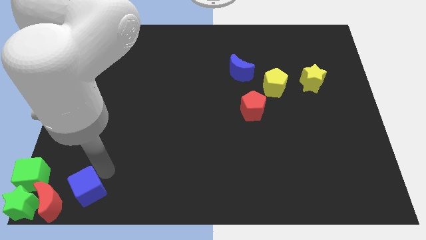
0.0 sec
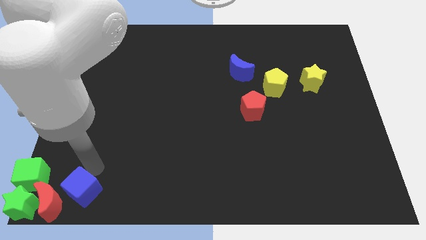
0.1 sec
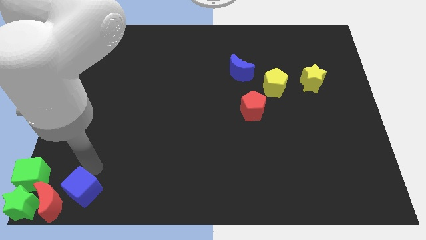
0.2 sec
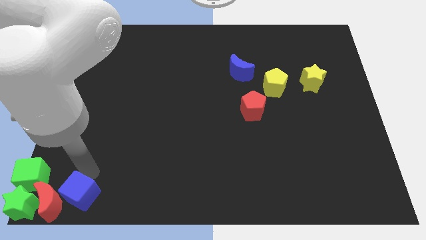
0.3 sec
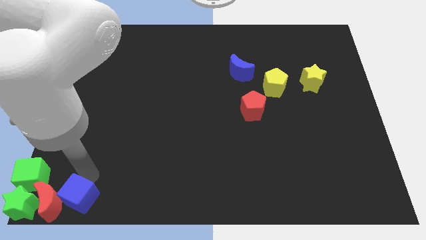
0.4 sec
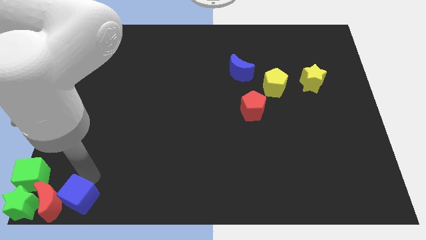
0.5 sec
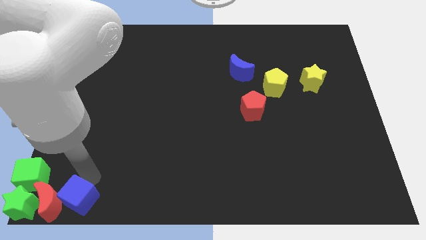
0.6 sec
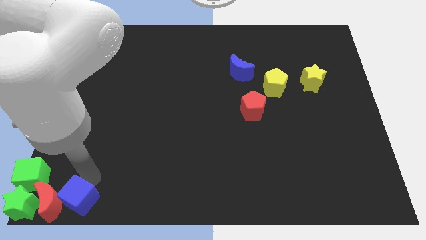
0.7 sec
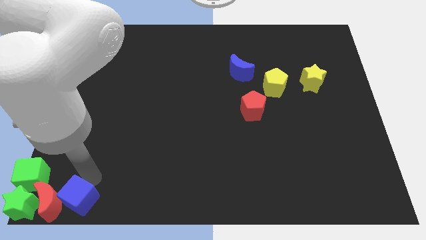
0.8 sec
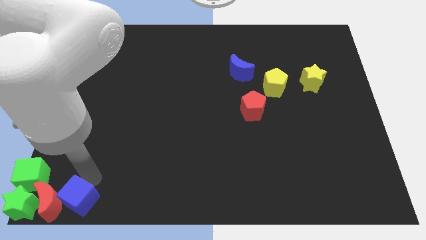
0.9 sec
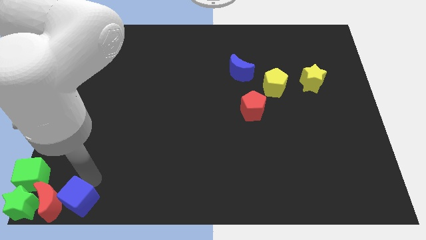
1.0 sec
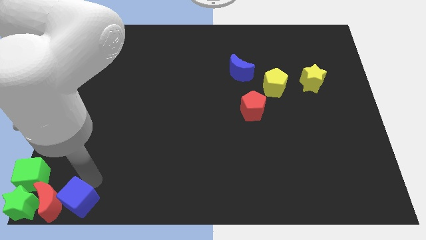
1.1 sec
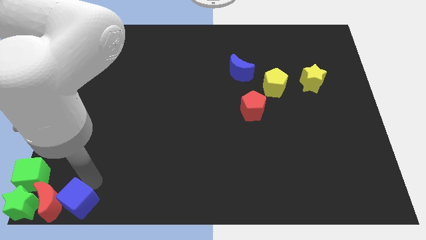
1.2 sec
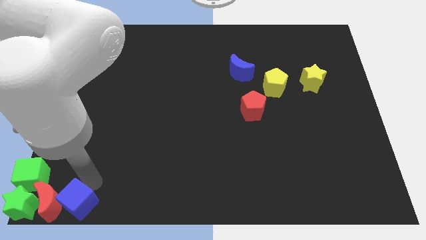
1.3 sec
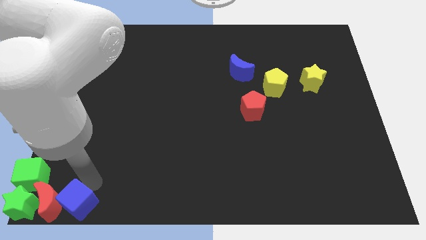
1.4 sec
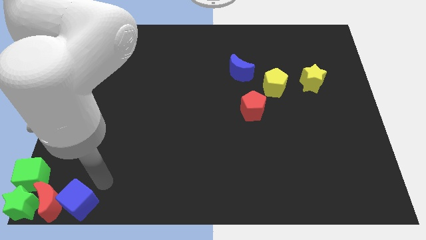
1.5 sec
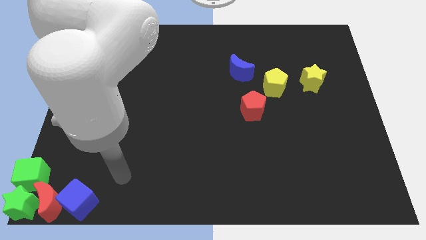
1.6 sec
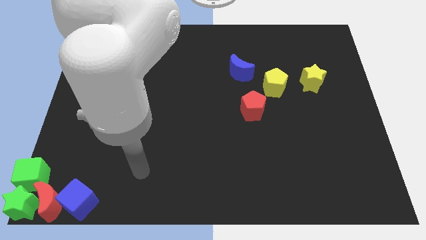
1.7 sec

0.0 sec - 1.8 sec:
place the blue cube to the right of the red moon

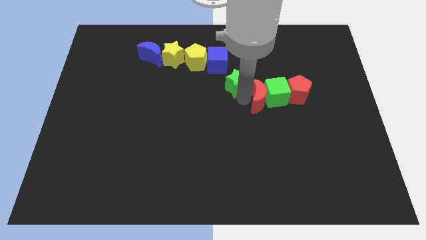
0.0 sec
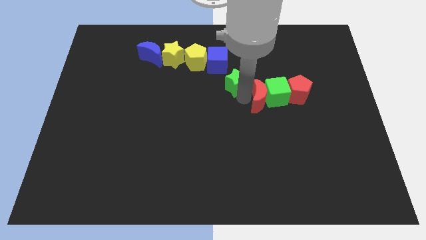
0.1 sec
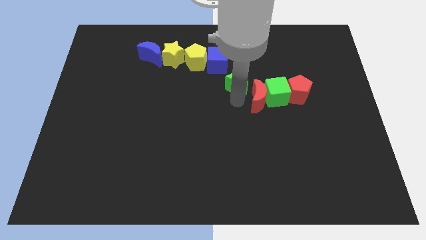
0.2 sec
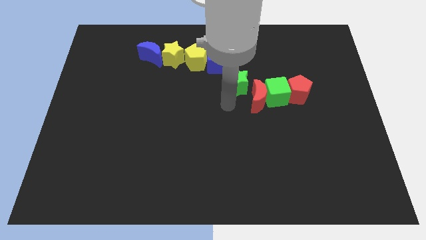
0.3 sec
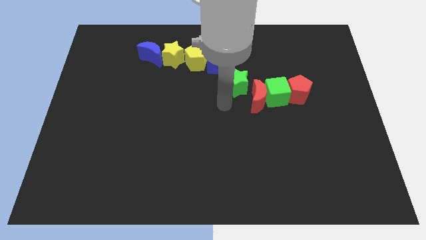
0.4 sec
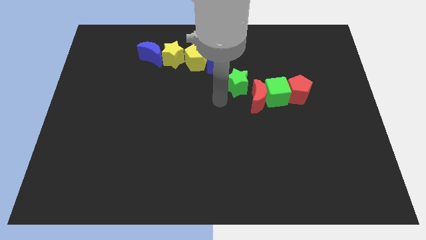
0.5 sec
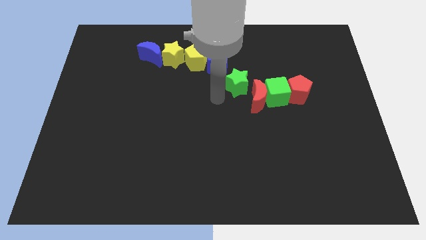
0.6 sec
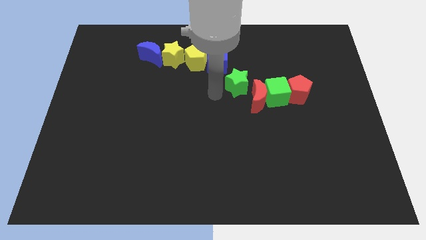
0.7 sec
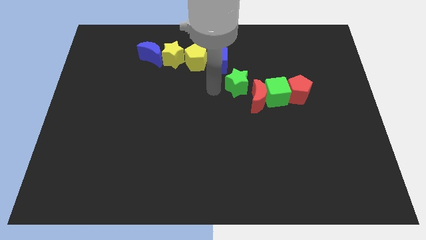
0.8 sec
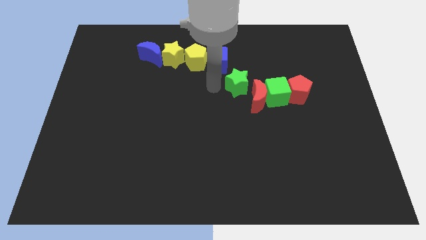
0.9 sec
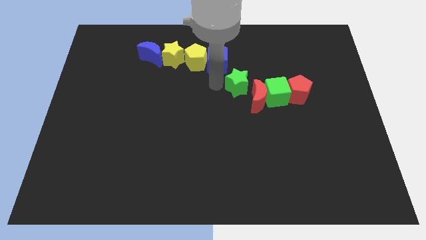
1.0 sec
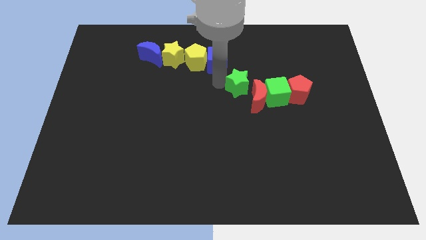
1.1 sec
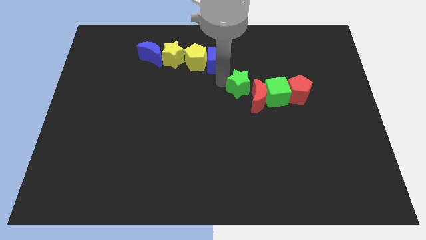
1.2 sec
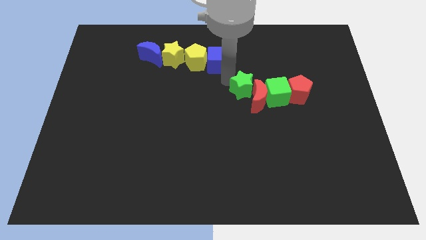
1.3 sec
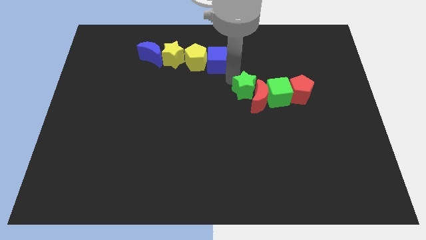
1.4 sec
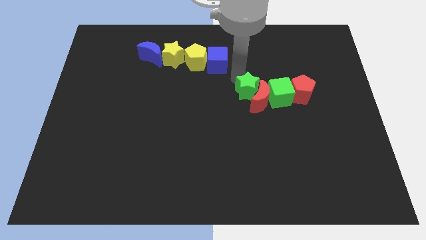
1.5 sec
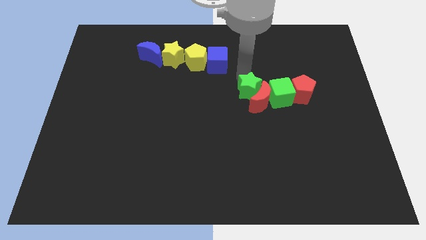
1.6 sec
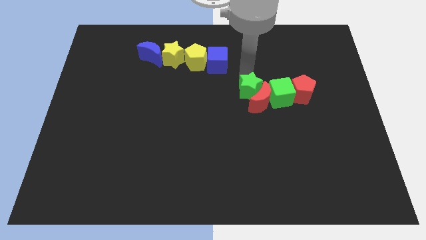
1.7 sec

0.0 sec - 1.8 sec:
push the green star to the left side of the red crescent

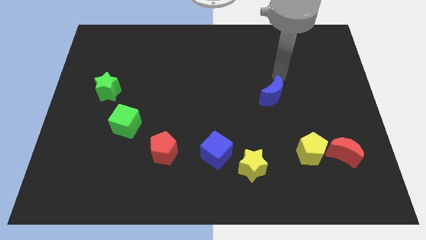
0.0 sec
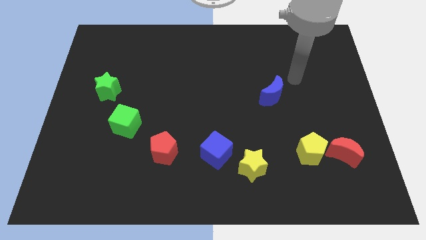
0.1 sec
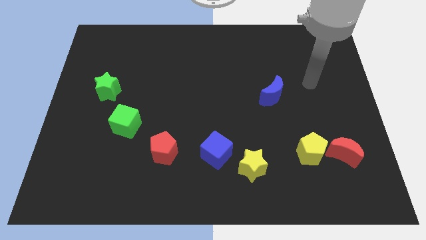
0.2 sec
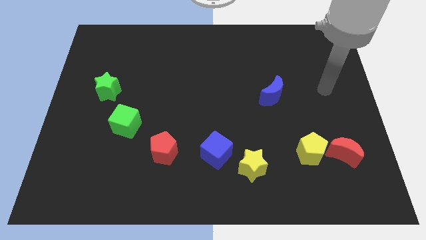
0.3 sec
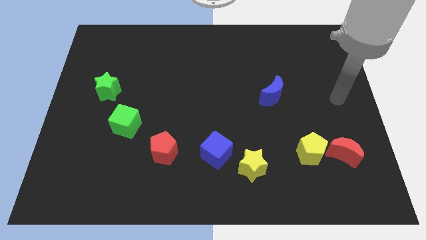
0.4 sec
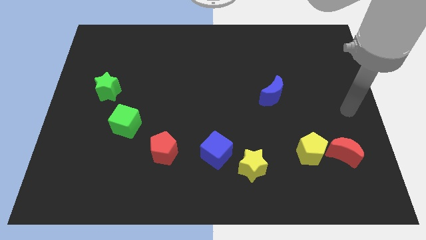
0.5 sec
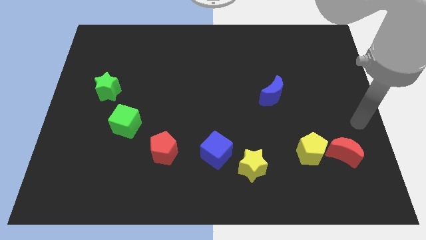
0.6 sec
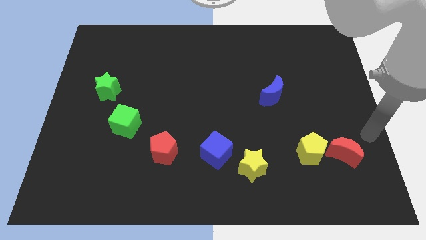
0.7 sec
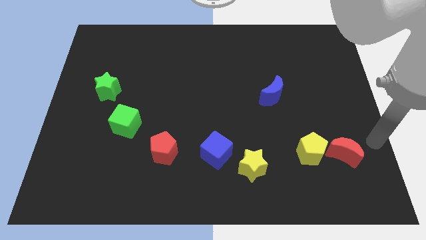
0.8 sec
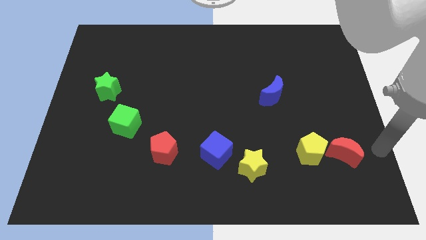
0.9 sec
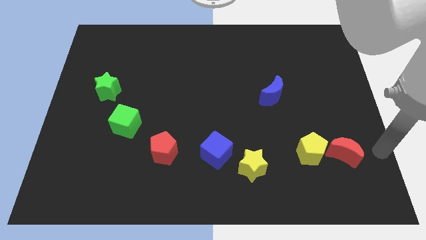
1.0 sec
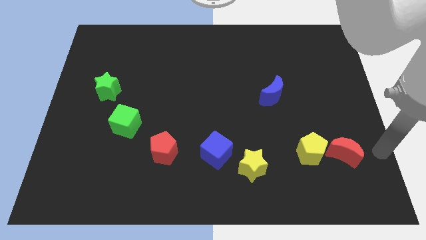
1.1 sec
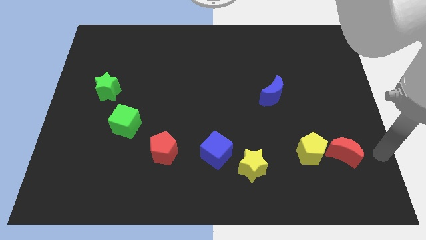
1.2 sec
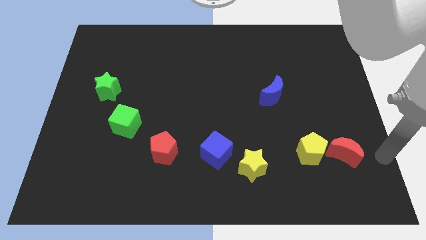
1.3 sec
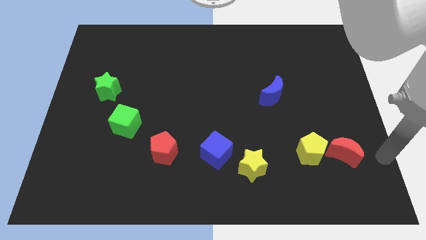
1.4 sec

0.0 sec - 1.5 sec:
move the pointer to the right of the red moon

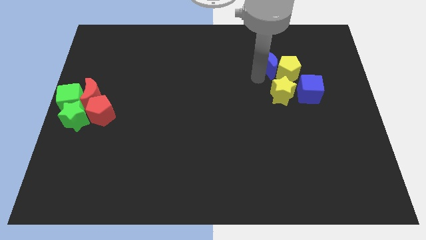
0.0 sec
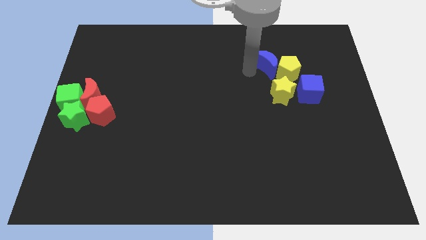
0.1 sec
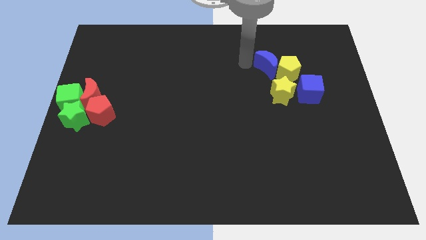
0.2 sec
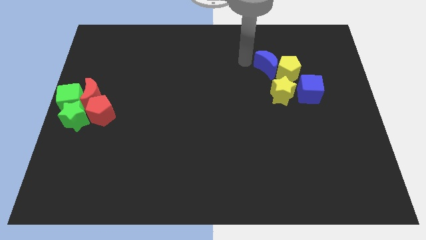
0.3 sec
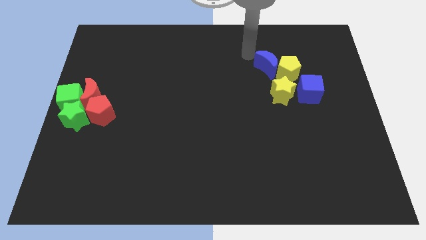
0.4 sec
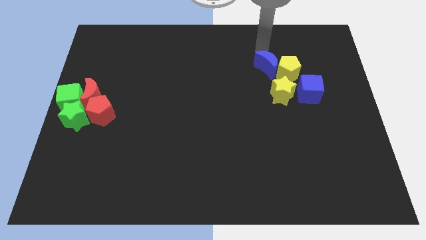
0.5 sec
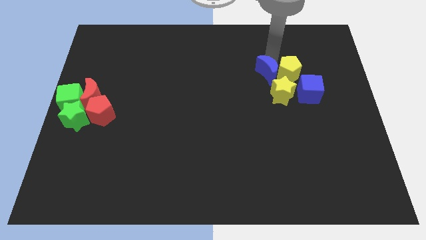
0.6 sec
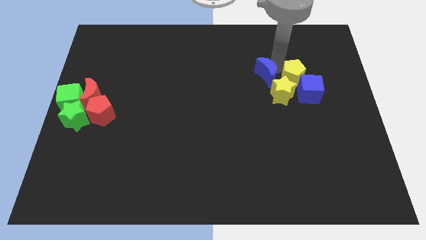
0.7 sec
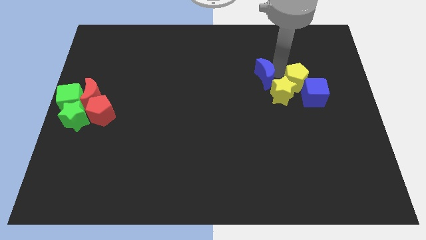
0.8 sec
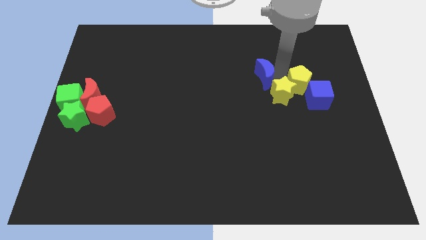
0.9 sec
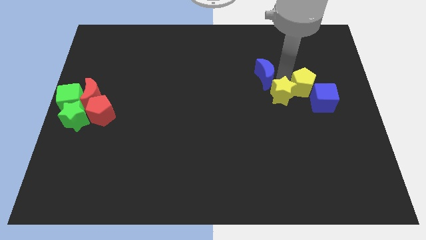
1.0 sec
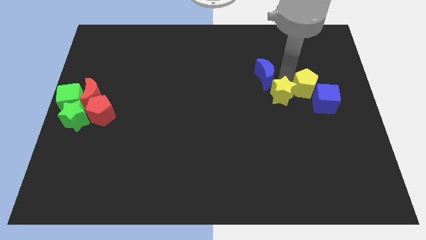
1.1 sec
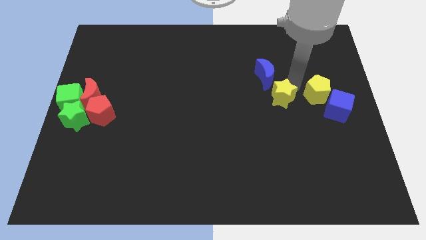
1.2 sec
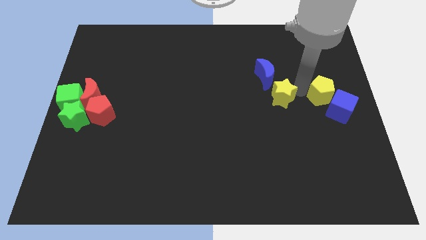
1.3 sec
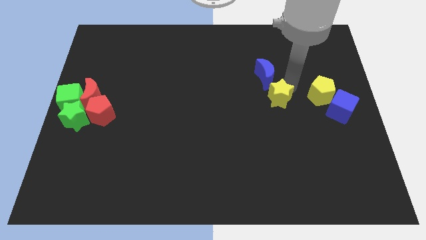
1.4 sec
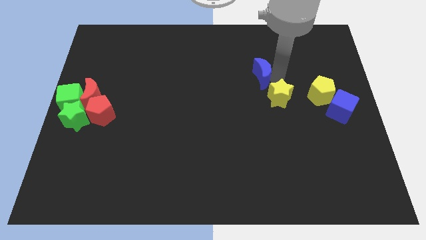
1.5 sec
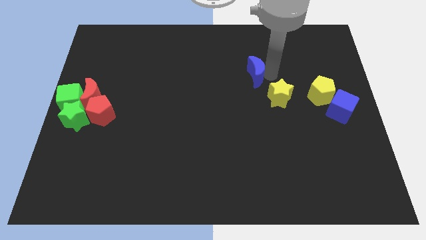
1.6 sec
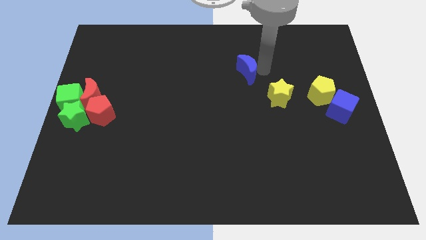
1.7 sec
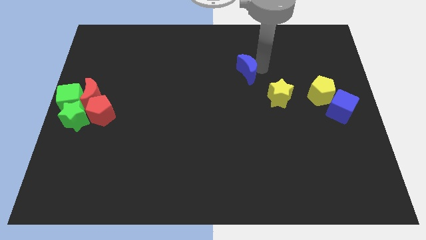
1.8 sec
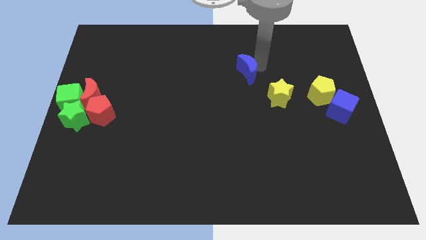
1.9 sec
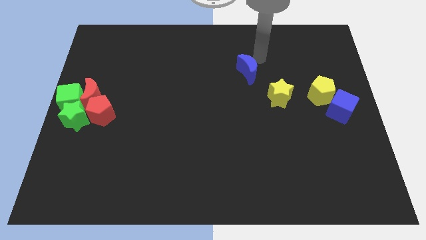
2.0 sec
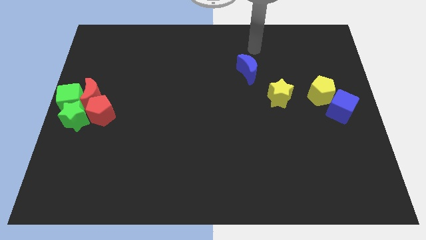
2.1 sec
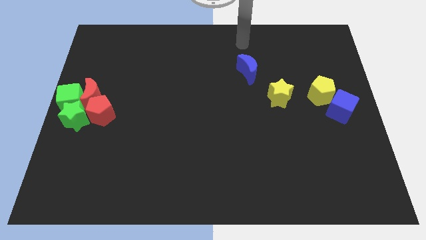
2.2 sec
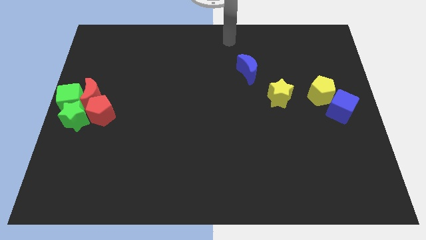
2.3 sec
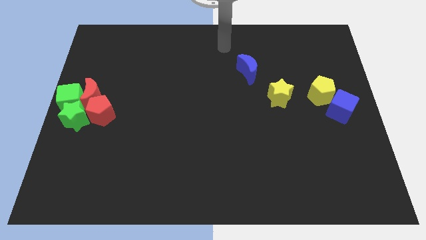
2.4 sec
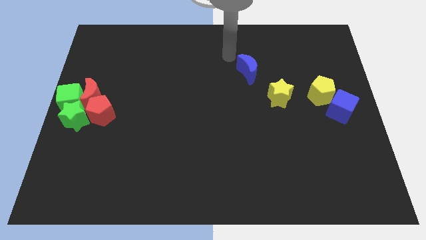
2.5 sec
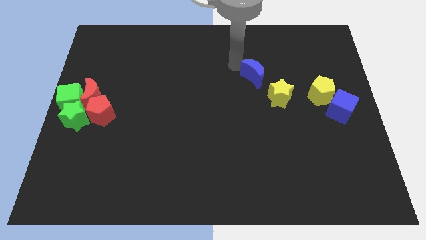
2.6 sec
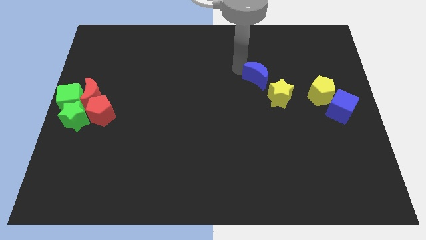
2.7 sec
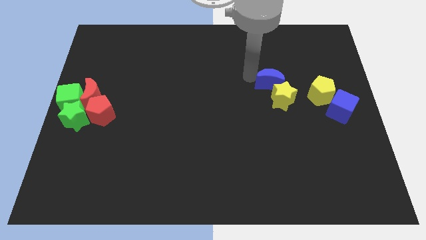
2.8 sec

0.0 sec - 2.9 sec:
separate the blue moon from the group of blocks

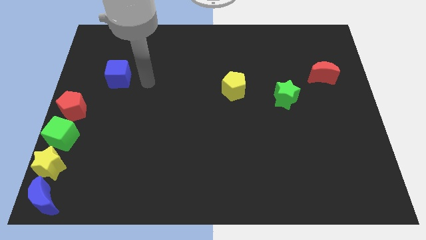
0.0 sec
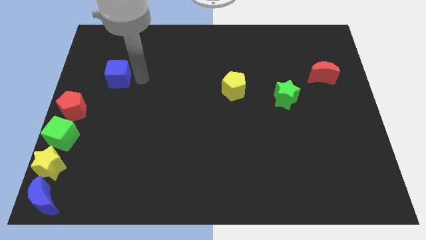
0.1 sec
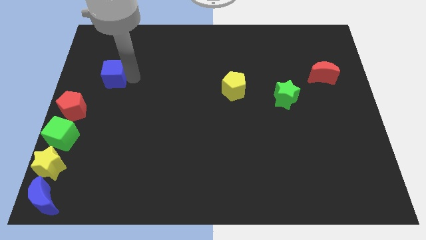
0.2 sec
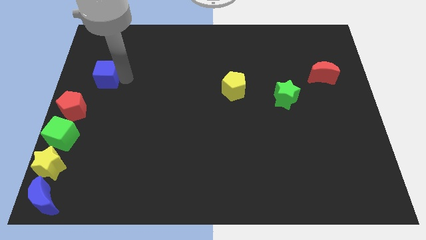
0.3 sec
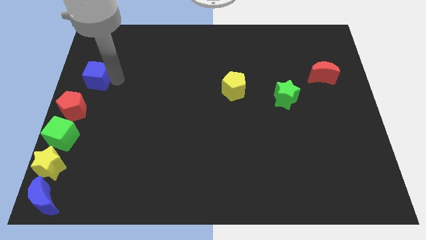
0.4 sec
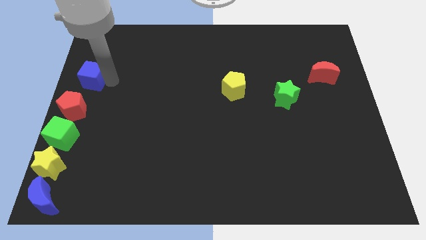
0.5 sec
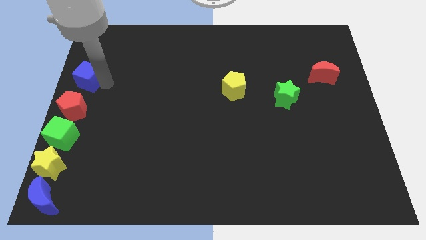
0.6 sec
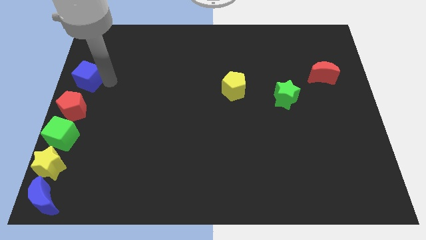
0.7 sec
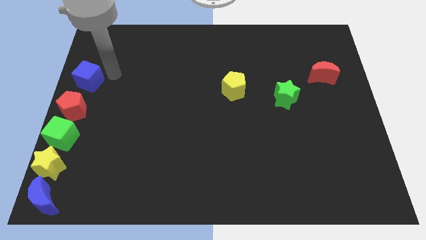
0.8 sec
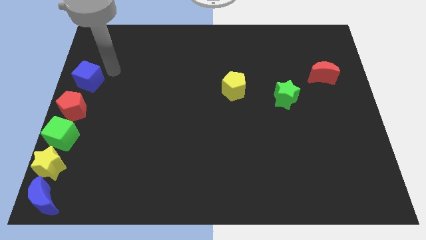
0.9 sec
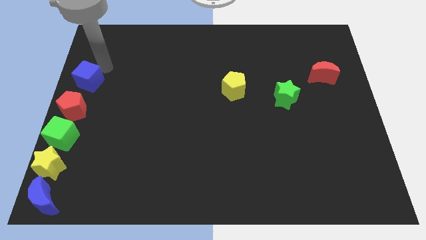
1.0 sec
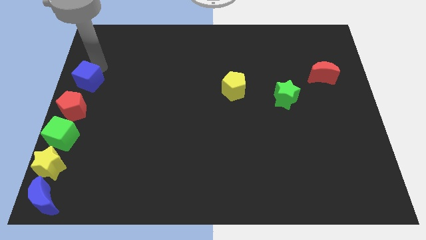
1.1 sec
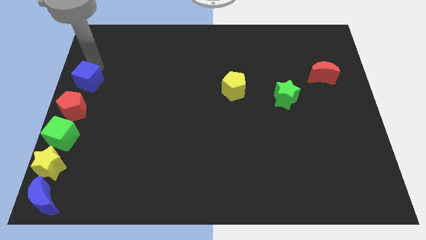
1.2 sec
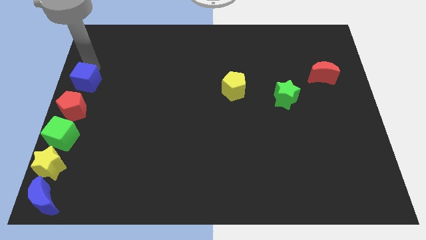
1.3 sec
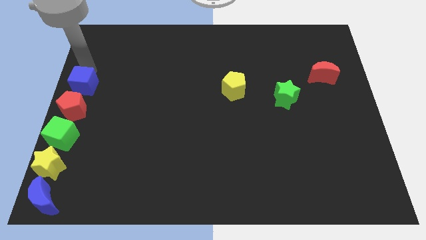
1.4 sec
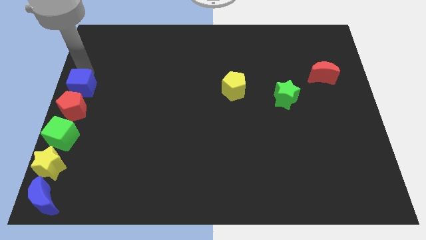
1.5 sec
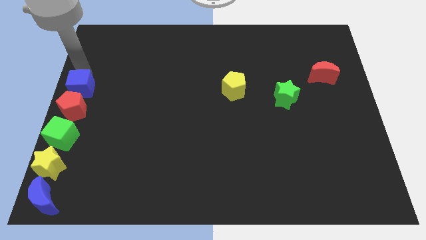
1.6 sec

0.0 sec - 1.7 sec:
put the blue cube at the top of red pentagon
